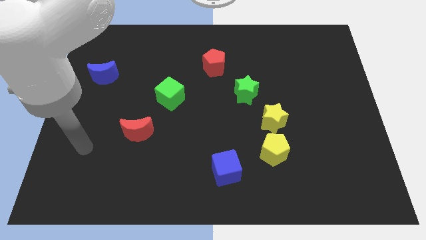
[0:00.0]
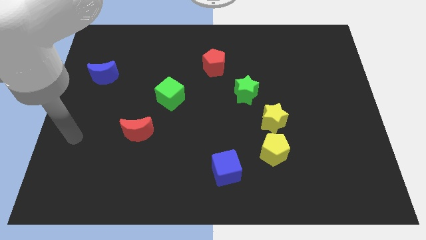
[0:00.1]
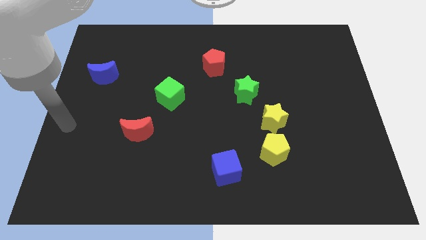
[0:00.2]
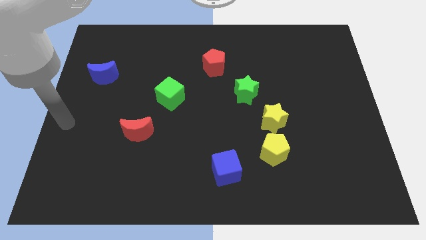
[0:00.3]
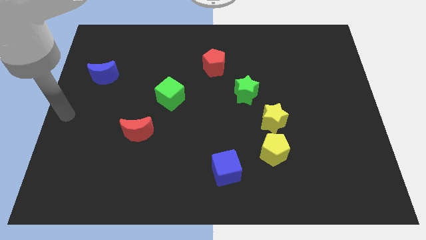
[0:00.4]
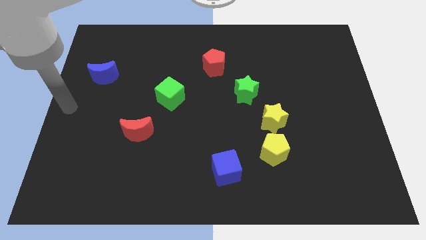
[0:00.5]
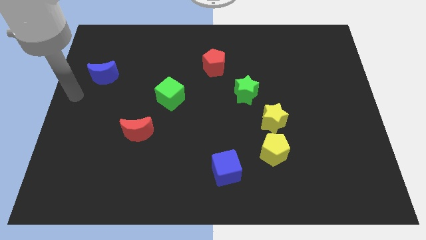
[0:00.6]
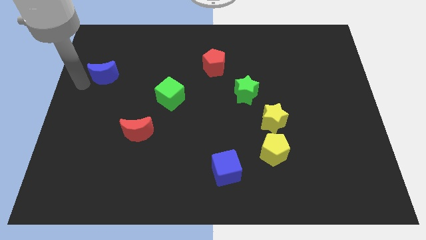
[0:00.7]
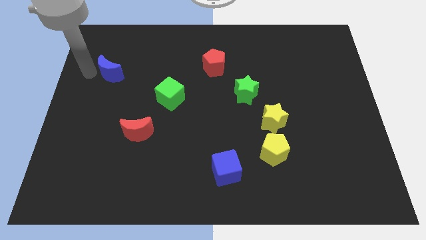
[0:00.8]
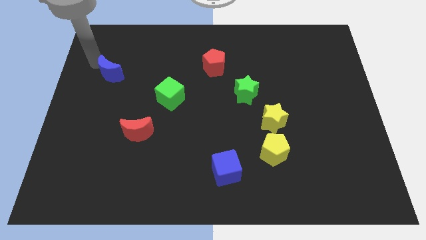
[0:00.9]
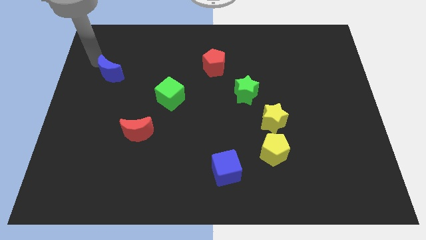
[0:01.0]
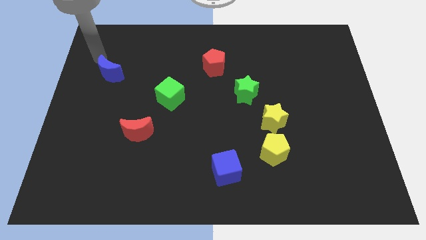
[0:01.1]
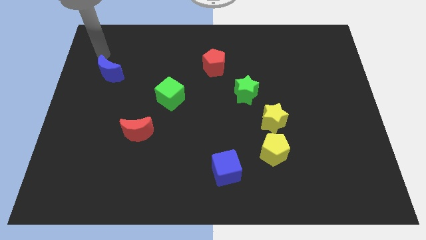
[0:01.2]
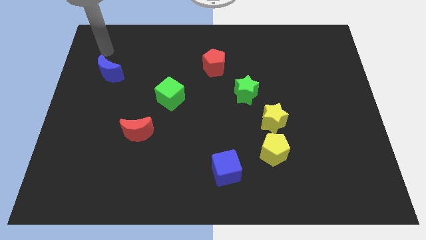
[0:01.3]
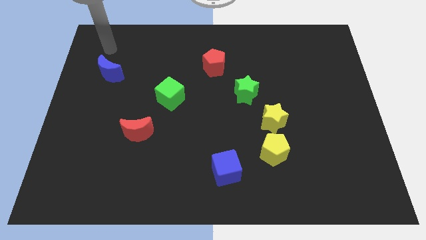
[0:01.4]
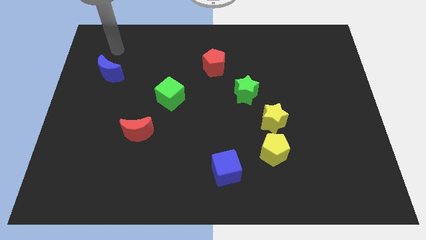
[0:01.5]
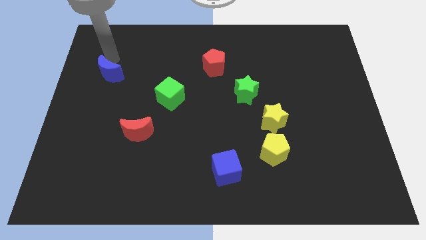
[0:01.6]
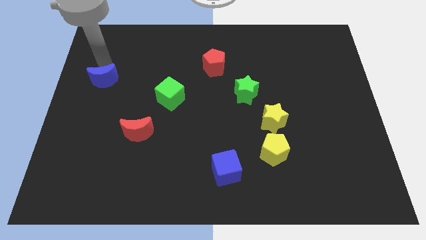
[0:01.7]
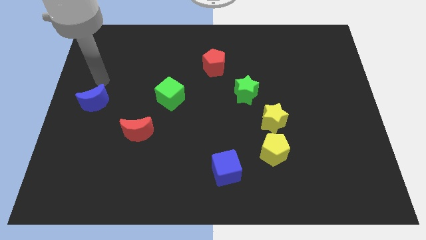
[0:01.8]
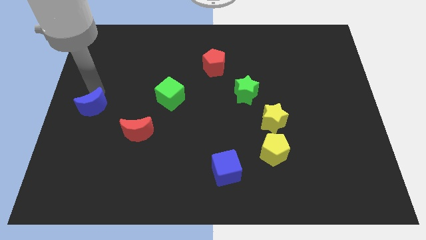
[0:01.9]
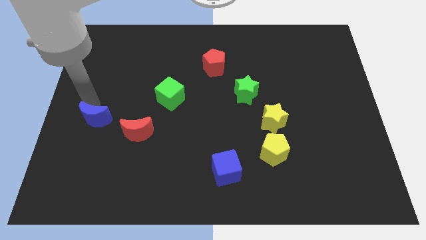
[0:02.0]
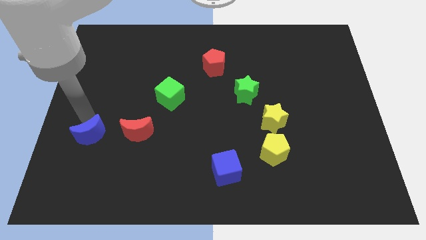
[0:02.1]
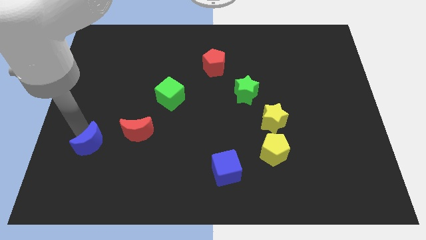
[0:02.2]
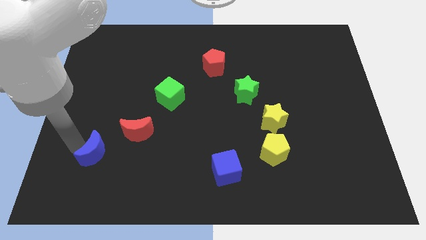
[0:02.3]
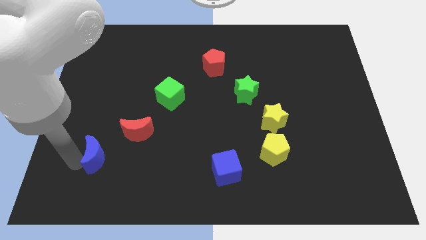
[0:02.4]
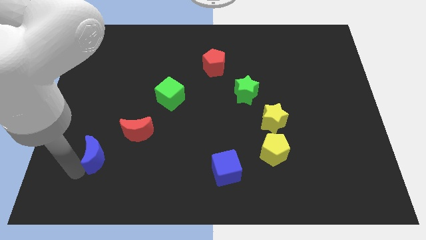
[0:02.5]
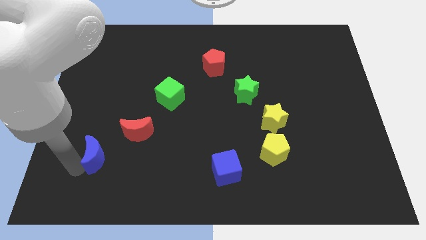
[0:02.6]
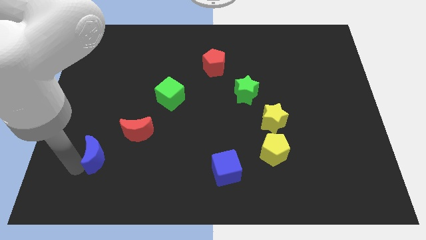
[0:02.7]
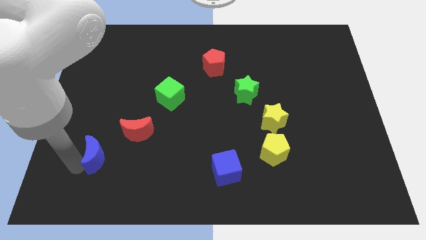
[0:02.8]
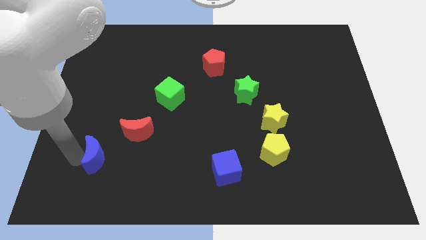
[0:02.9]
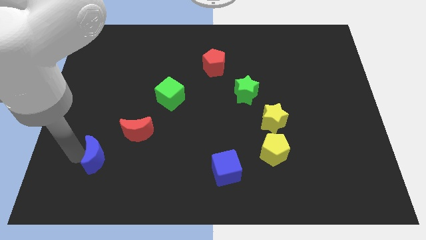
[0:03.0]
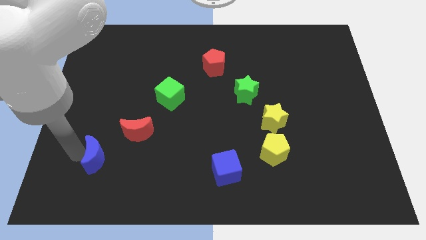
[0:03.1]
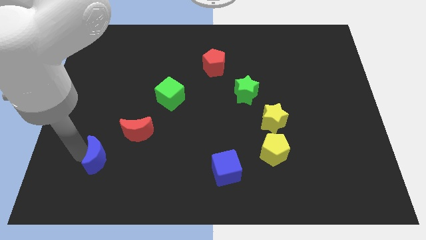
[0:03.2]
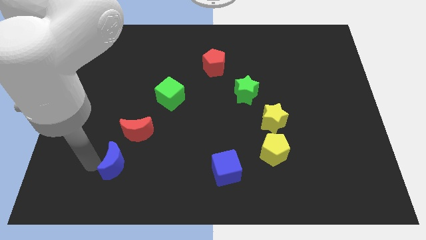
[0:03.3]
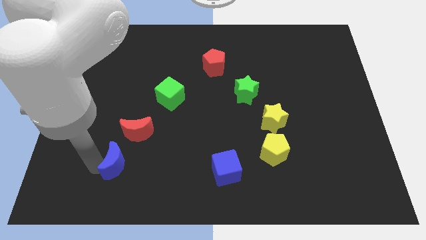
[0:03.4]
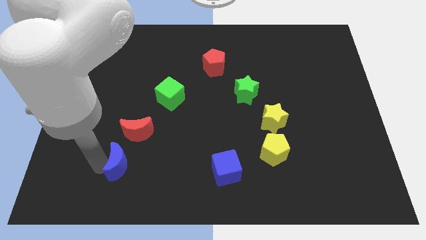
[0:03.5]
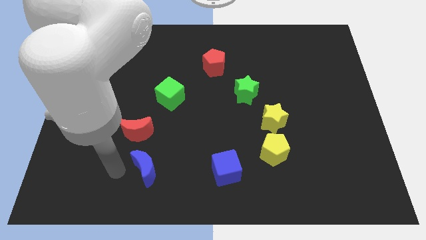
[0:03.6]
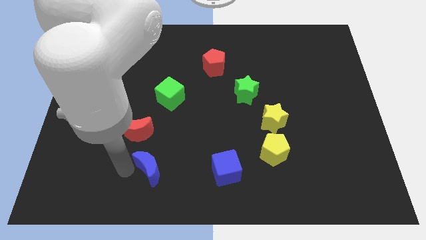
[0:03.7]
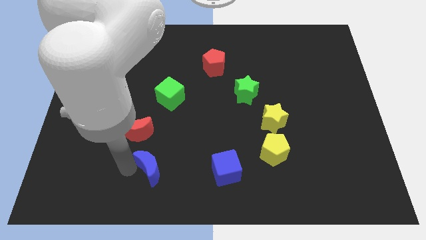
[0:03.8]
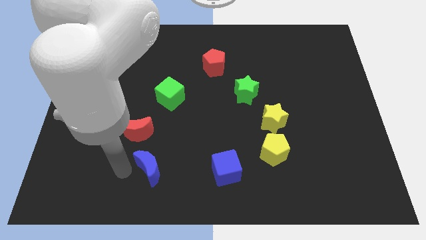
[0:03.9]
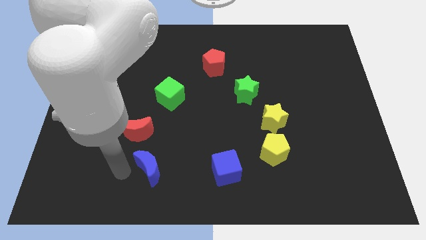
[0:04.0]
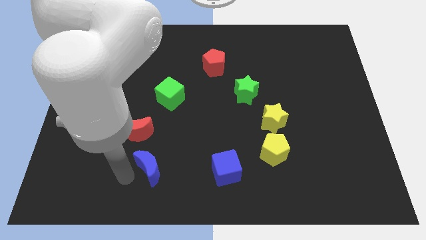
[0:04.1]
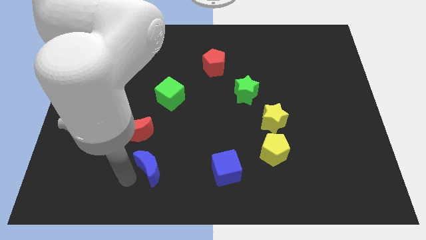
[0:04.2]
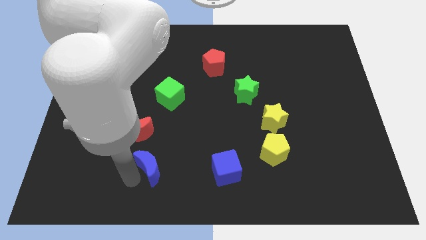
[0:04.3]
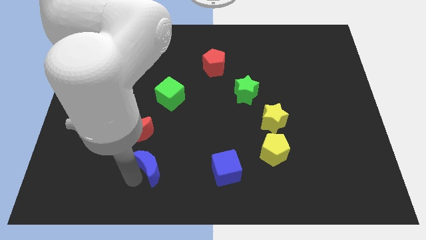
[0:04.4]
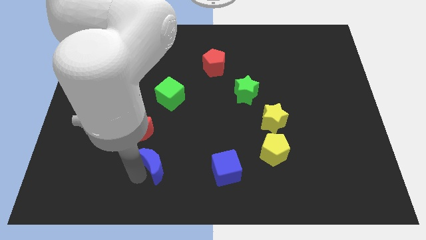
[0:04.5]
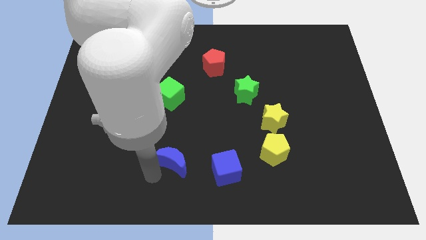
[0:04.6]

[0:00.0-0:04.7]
place the blue crescent to the left of the blue cube

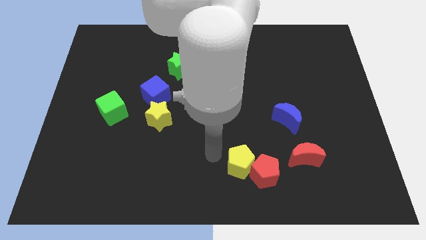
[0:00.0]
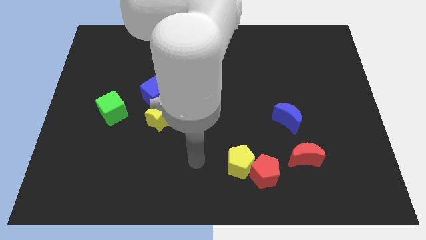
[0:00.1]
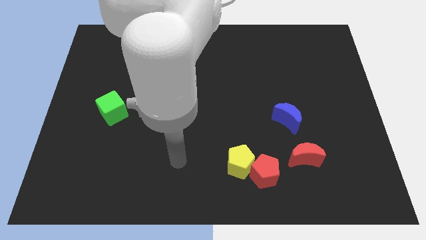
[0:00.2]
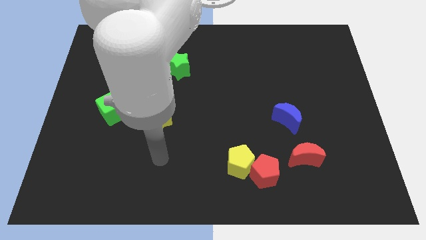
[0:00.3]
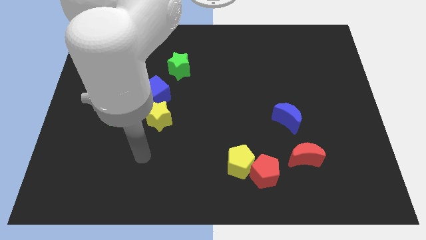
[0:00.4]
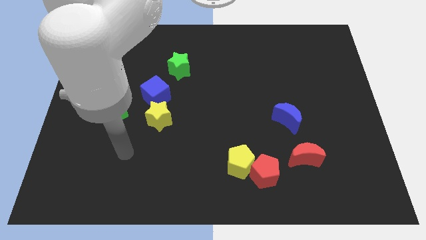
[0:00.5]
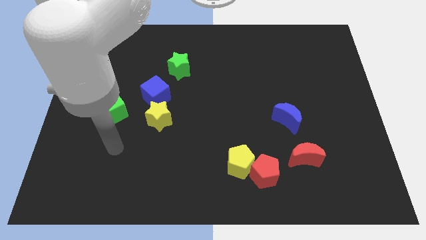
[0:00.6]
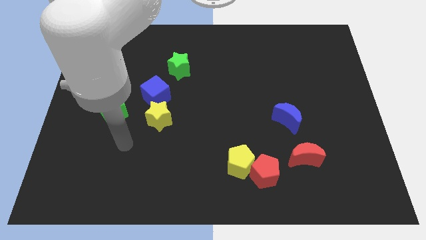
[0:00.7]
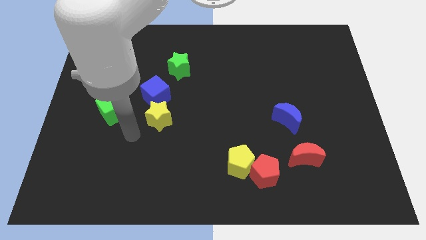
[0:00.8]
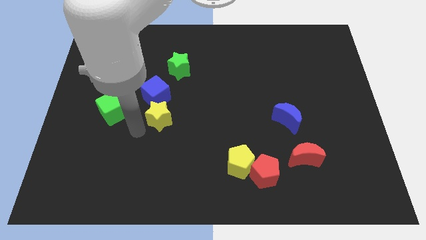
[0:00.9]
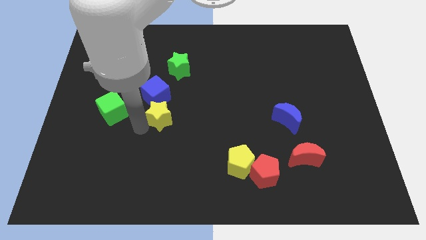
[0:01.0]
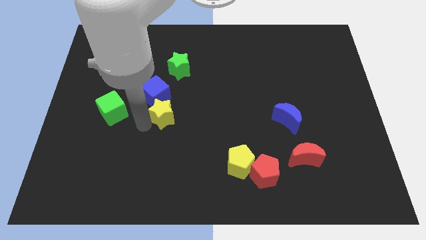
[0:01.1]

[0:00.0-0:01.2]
tap the yellow star

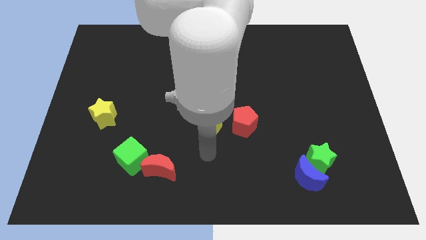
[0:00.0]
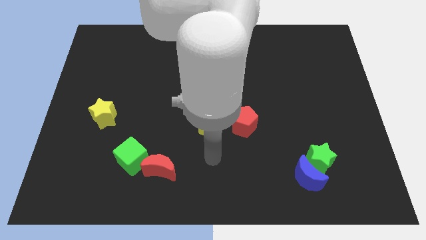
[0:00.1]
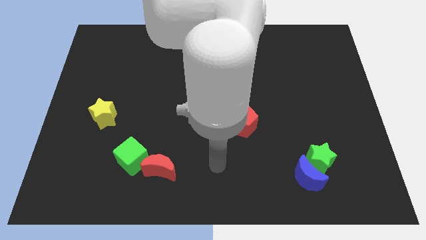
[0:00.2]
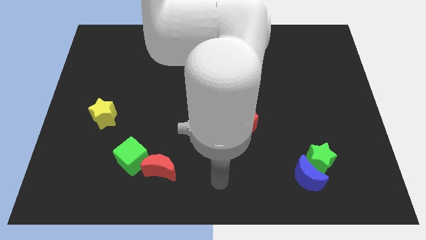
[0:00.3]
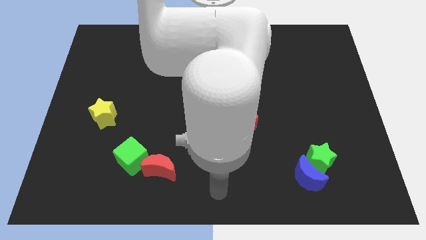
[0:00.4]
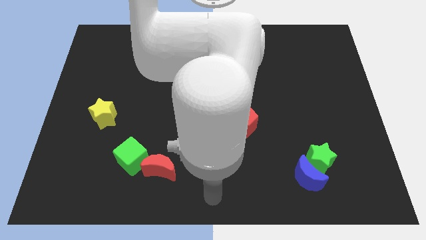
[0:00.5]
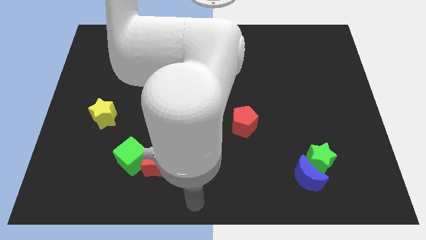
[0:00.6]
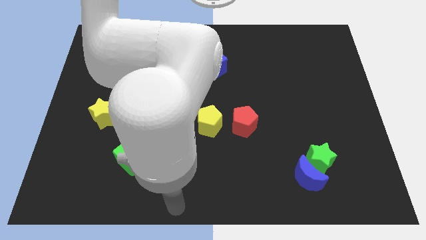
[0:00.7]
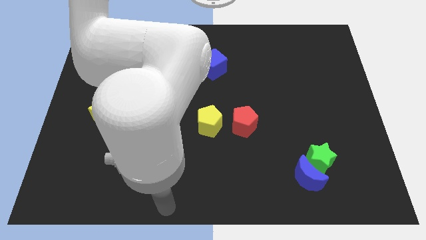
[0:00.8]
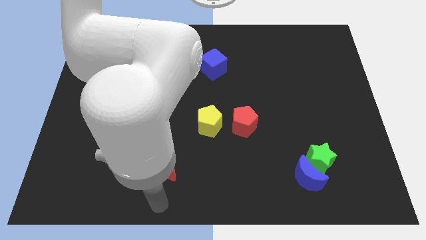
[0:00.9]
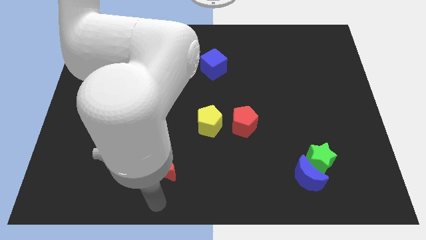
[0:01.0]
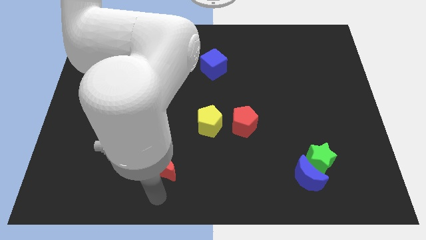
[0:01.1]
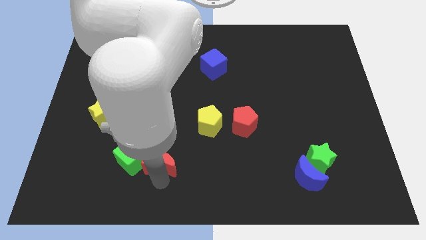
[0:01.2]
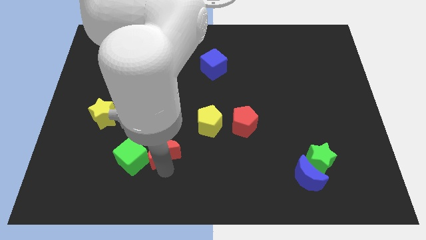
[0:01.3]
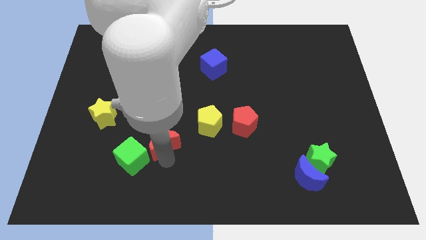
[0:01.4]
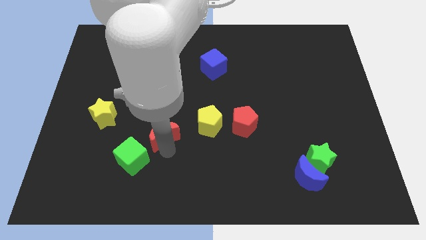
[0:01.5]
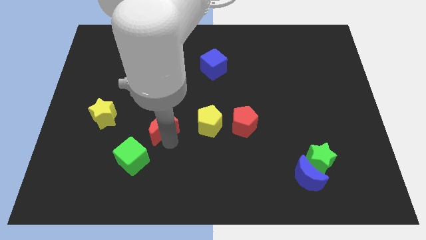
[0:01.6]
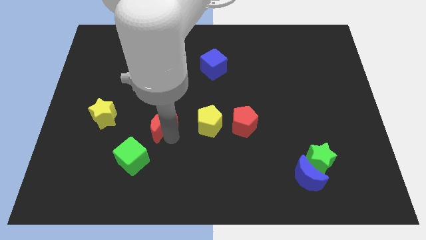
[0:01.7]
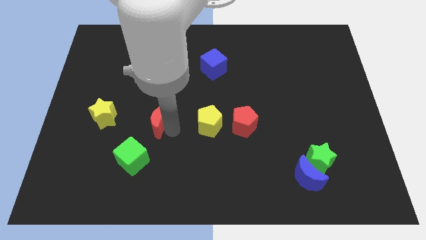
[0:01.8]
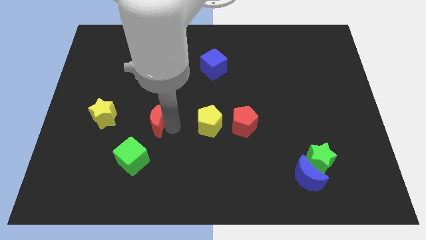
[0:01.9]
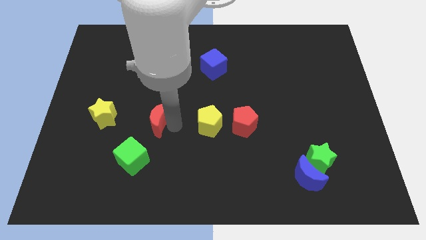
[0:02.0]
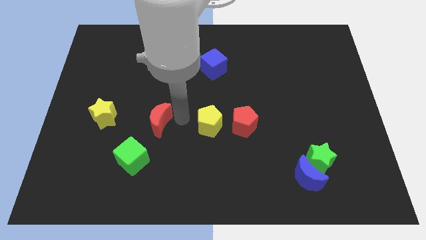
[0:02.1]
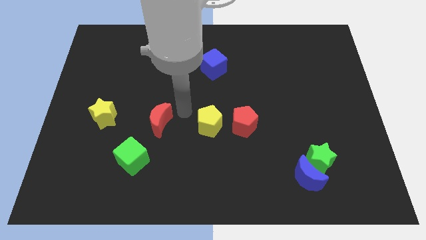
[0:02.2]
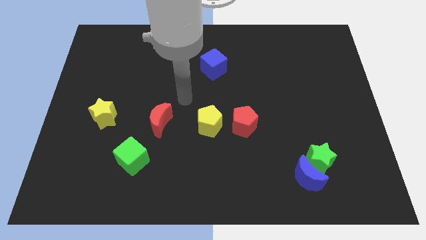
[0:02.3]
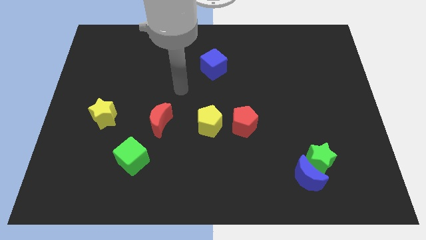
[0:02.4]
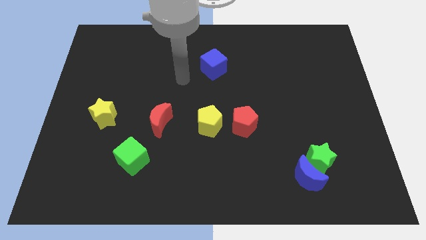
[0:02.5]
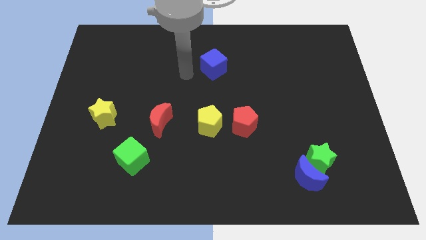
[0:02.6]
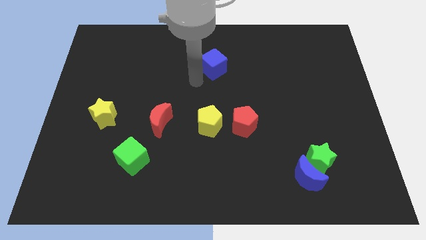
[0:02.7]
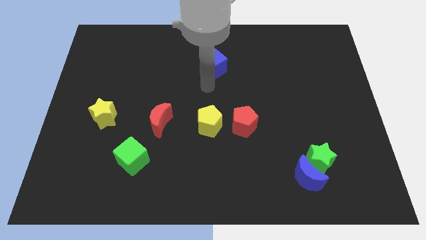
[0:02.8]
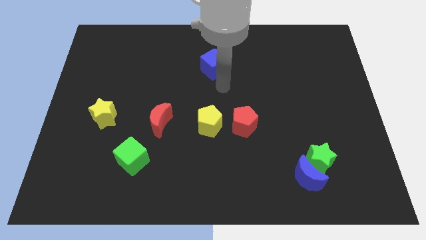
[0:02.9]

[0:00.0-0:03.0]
put red crescent in between yellow blocks
